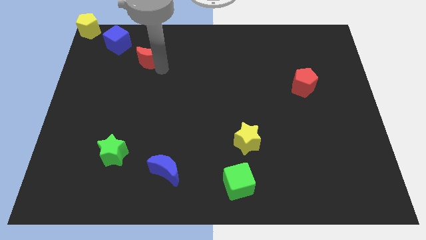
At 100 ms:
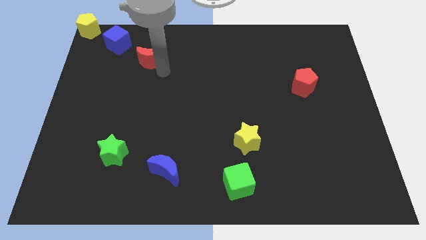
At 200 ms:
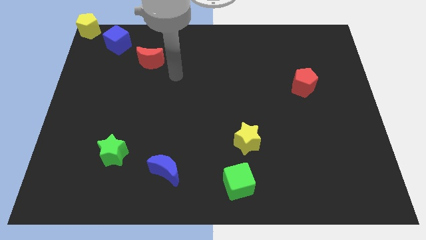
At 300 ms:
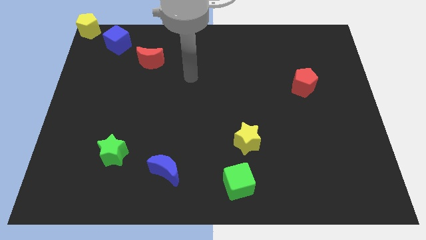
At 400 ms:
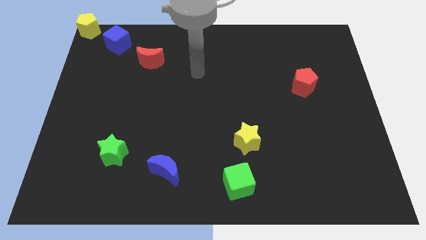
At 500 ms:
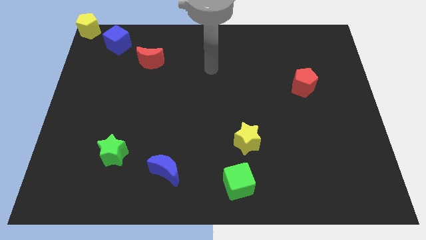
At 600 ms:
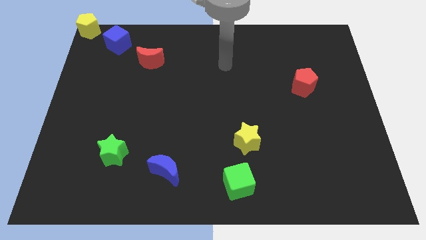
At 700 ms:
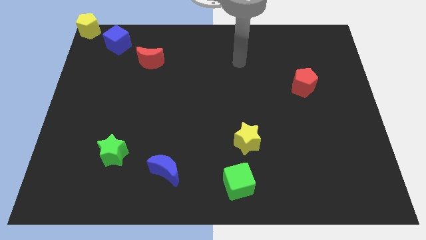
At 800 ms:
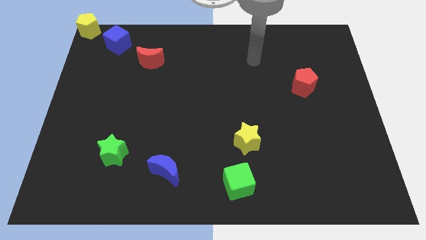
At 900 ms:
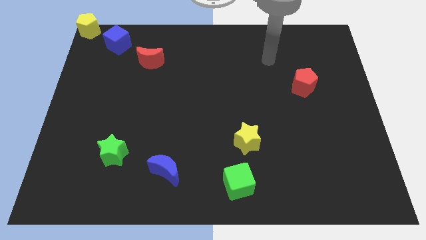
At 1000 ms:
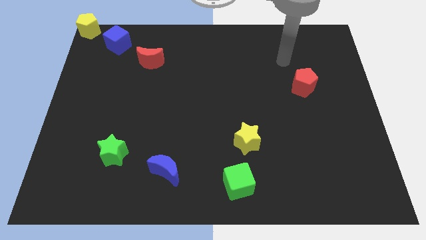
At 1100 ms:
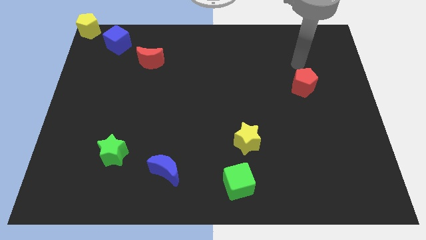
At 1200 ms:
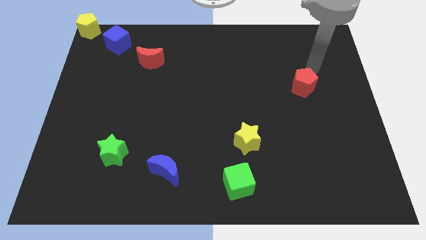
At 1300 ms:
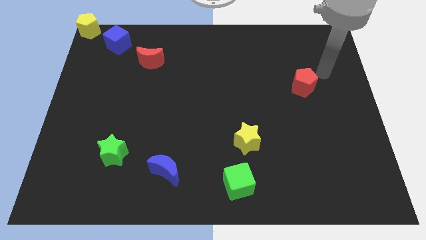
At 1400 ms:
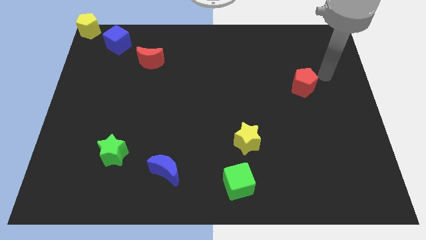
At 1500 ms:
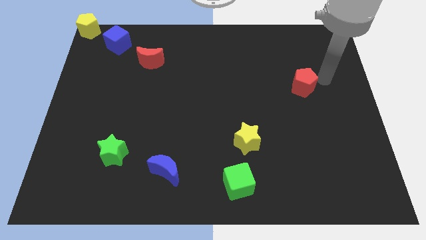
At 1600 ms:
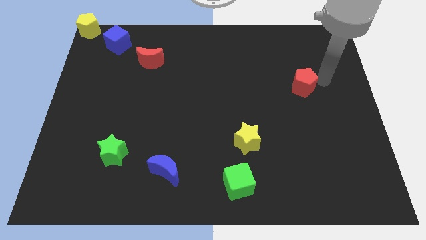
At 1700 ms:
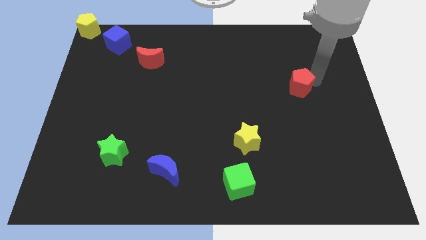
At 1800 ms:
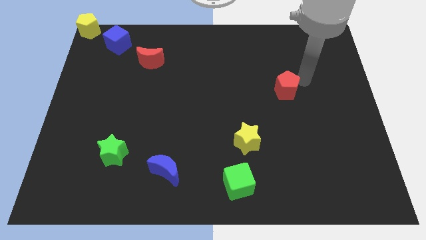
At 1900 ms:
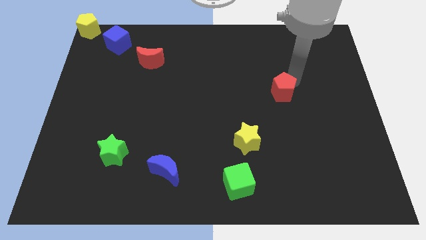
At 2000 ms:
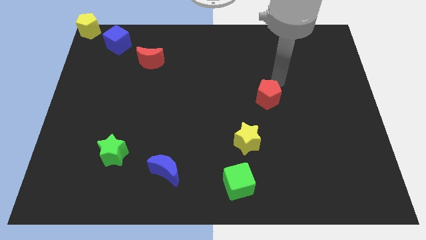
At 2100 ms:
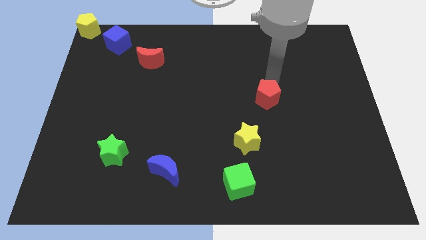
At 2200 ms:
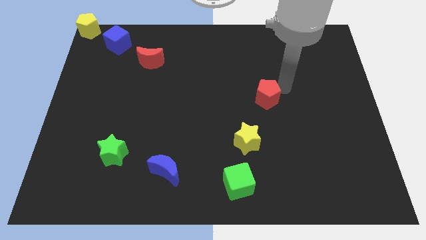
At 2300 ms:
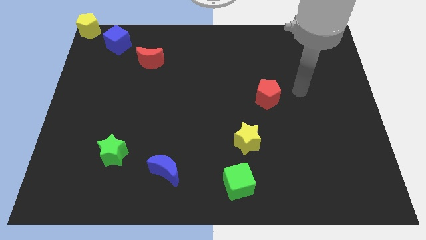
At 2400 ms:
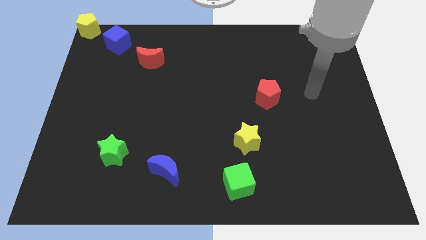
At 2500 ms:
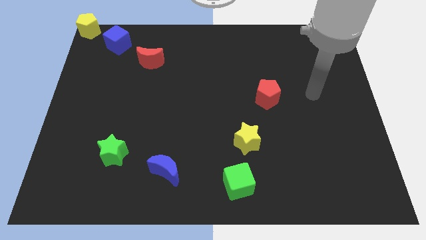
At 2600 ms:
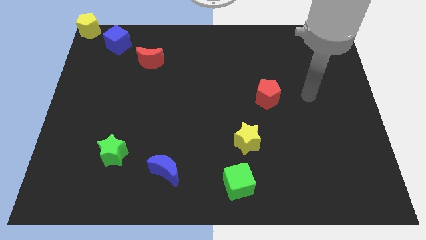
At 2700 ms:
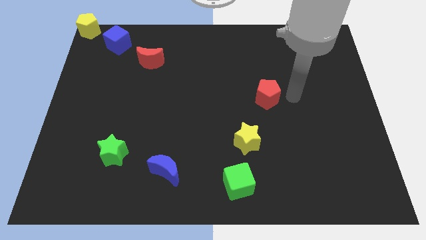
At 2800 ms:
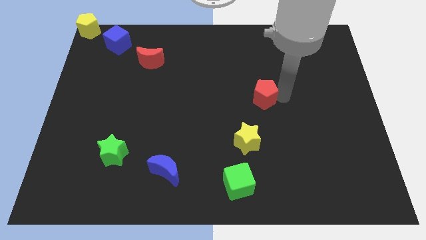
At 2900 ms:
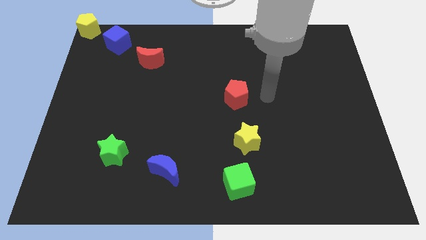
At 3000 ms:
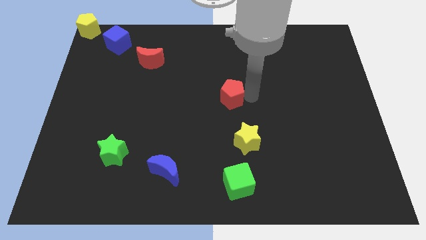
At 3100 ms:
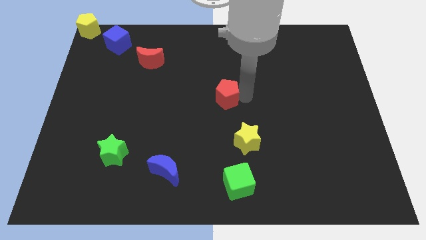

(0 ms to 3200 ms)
place red pentagon on top left of yellow star

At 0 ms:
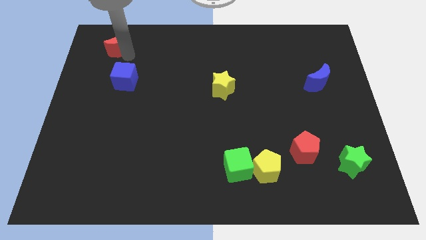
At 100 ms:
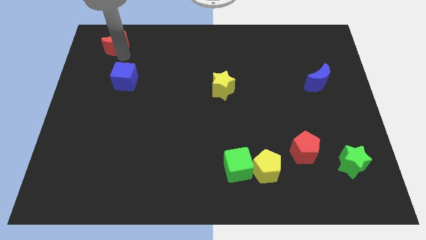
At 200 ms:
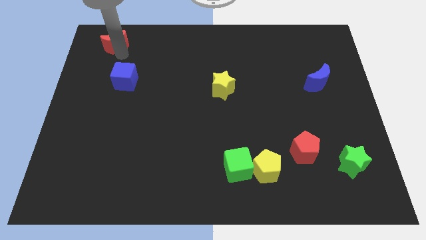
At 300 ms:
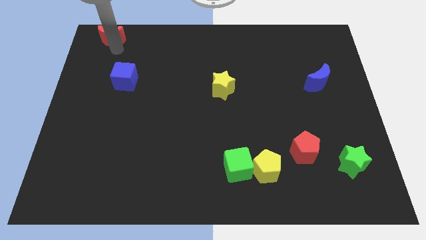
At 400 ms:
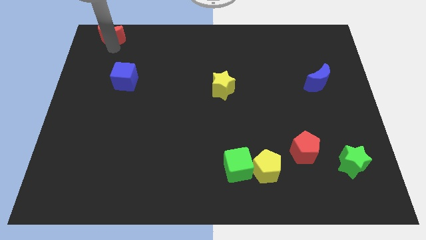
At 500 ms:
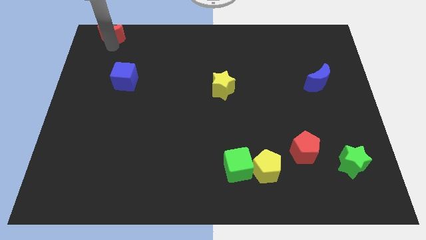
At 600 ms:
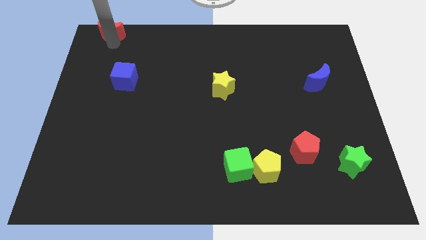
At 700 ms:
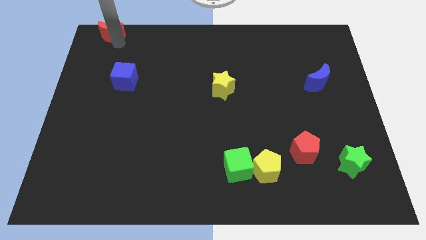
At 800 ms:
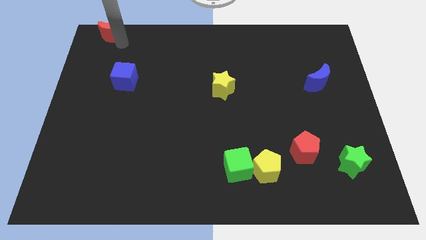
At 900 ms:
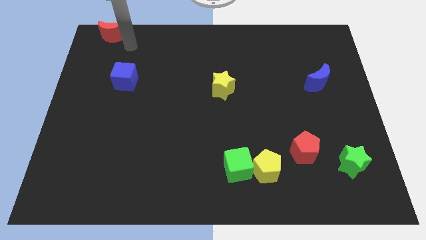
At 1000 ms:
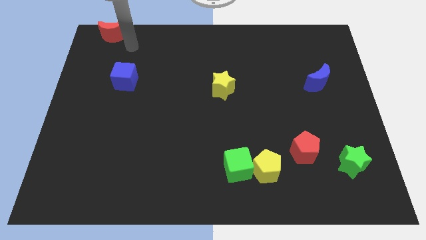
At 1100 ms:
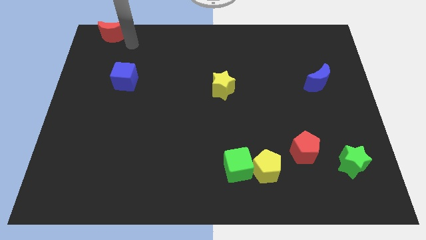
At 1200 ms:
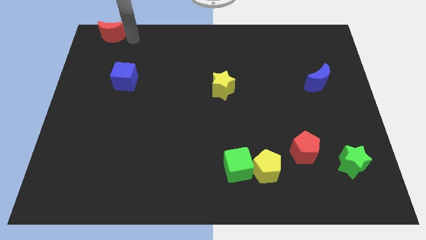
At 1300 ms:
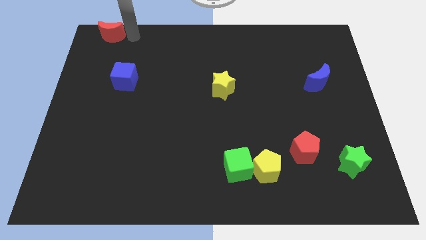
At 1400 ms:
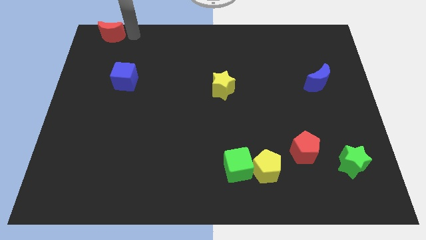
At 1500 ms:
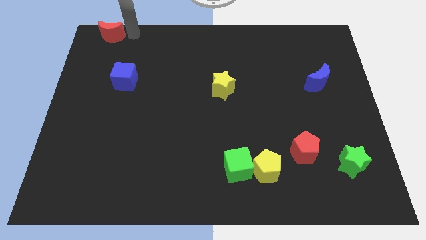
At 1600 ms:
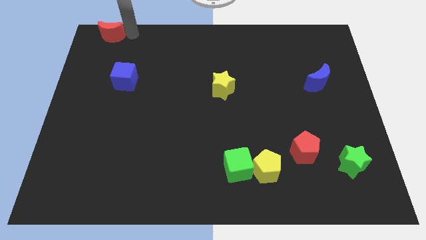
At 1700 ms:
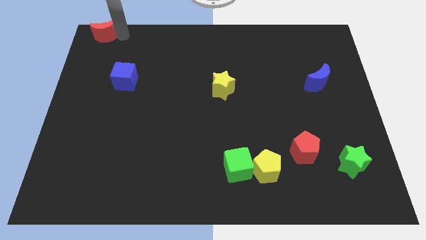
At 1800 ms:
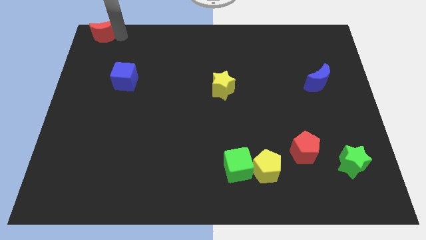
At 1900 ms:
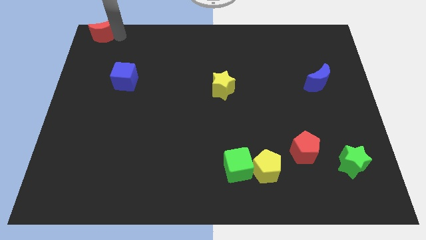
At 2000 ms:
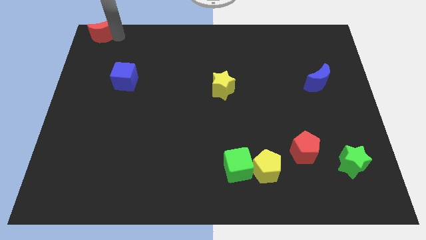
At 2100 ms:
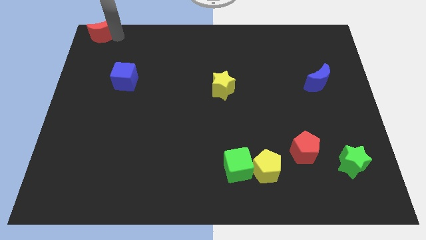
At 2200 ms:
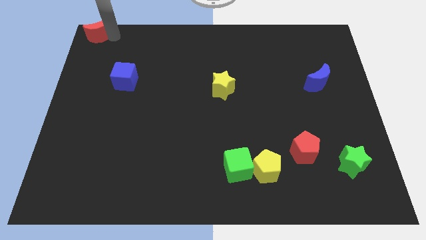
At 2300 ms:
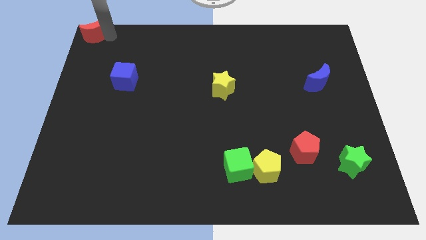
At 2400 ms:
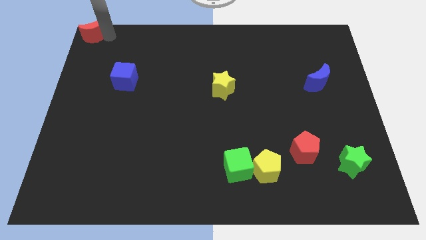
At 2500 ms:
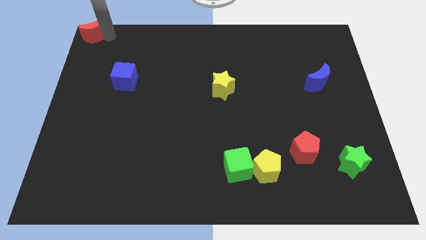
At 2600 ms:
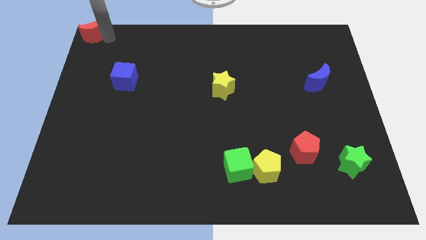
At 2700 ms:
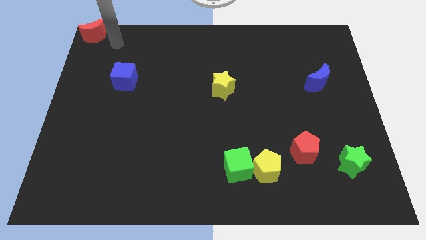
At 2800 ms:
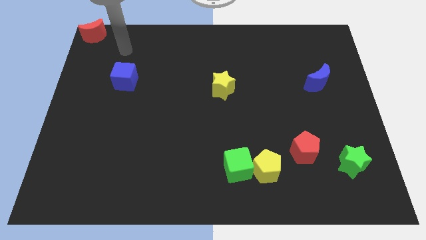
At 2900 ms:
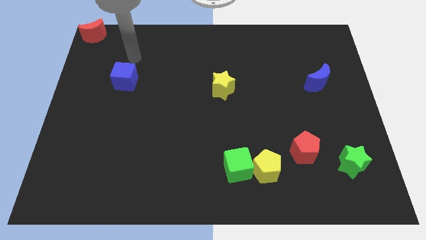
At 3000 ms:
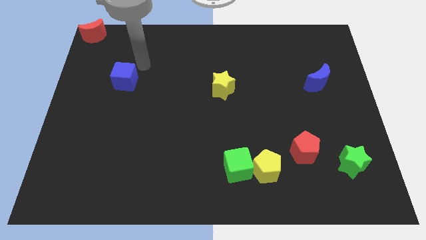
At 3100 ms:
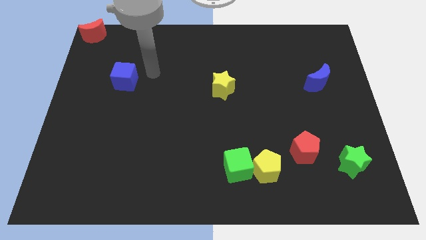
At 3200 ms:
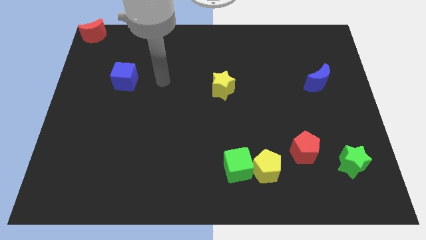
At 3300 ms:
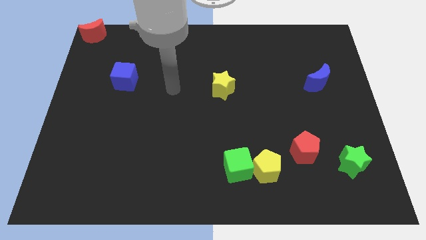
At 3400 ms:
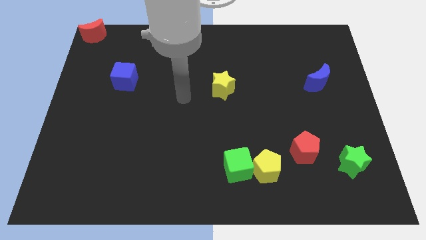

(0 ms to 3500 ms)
push the red crescent diagonal to the blue cube

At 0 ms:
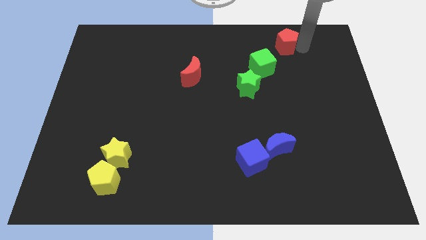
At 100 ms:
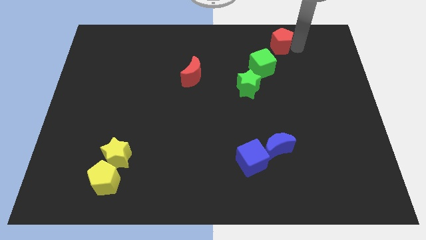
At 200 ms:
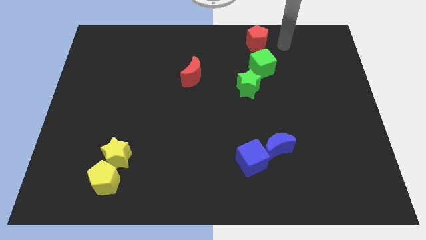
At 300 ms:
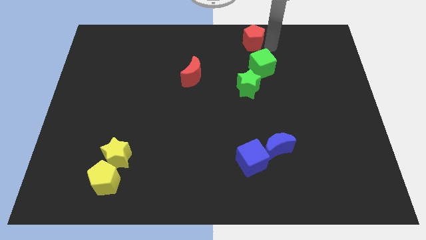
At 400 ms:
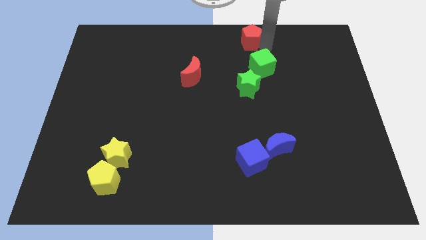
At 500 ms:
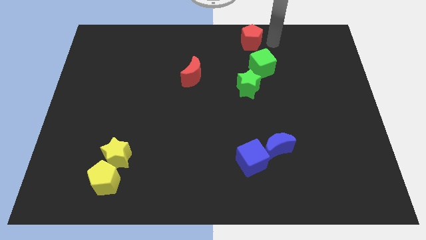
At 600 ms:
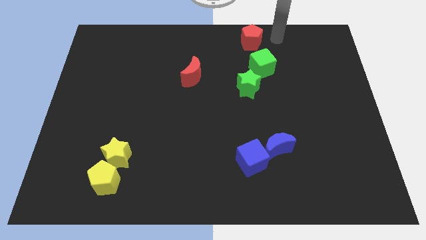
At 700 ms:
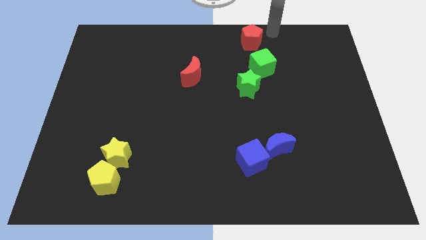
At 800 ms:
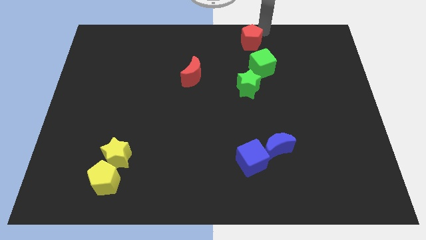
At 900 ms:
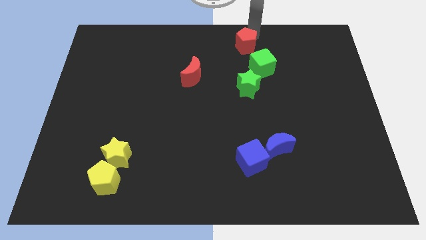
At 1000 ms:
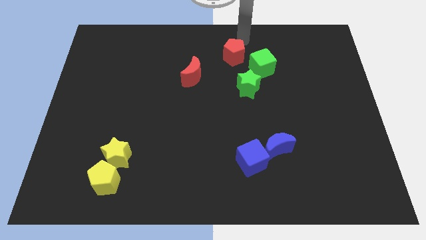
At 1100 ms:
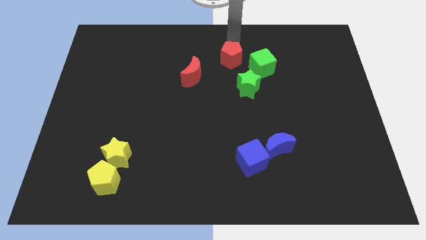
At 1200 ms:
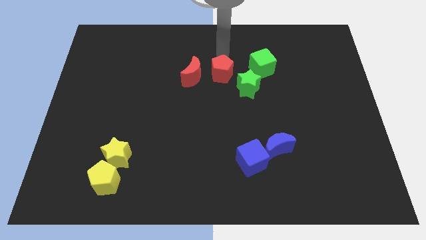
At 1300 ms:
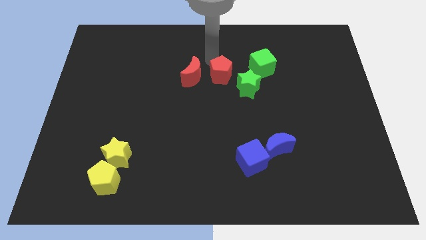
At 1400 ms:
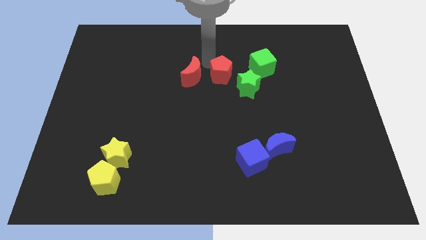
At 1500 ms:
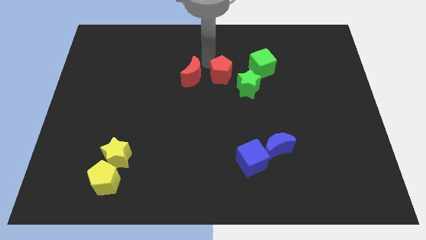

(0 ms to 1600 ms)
push the red pentagon close to the red crescent

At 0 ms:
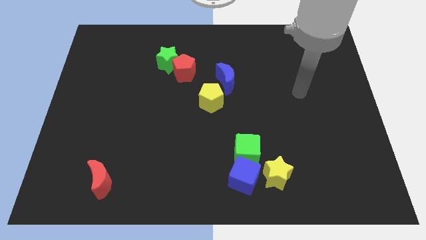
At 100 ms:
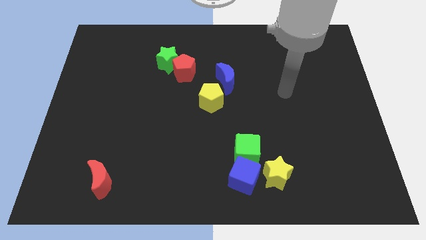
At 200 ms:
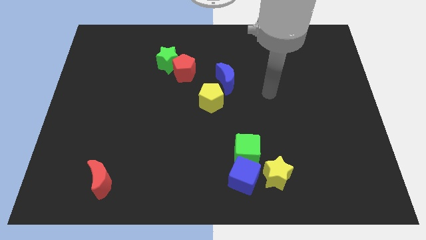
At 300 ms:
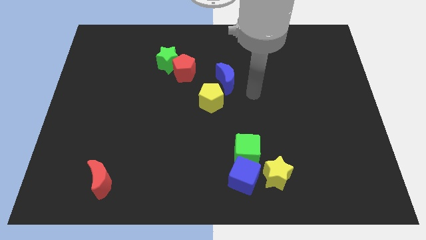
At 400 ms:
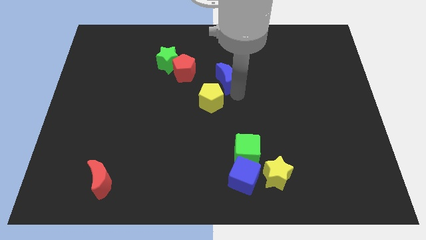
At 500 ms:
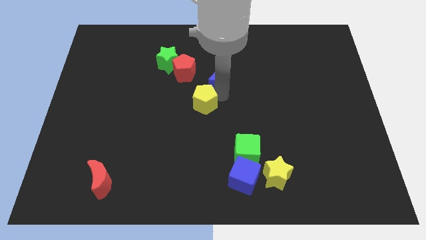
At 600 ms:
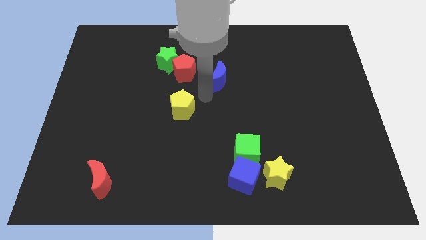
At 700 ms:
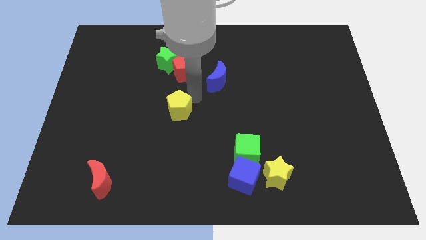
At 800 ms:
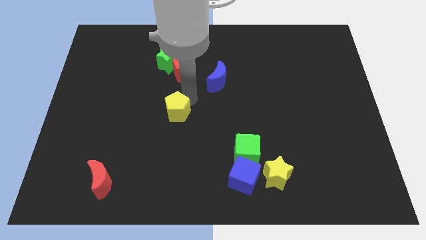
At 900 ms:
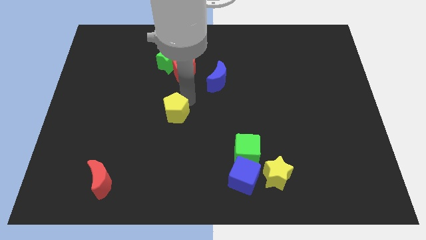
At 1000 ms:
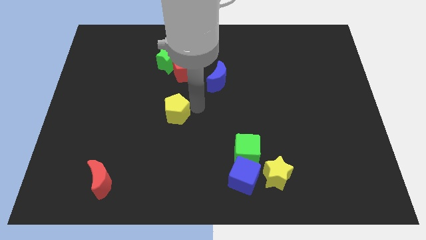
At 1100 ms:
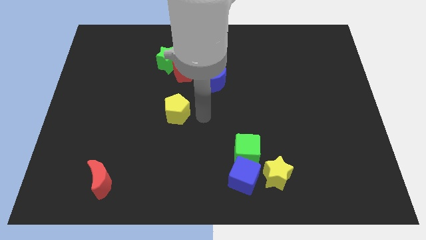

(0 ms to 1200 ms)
separate the yellow pentagon and blue moon
